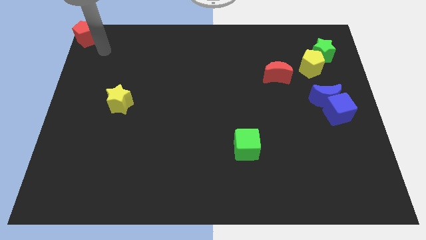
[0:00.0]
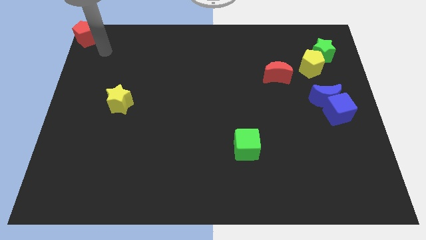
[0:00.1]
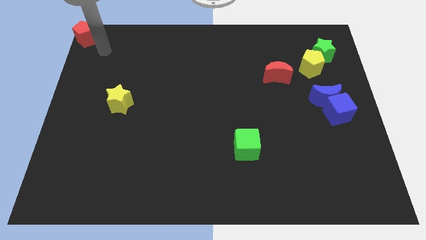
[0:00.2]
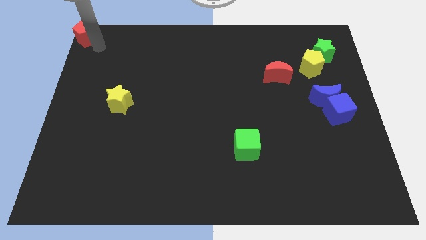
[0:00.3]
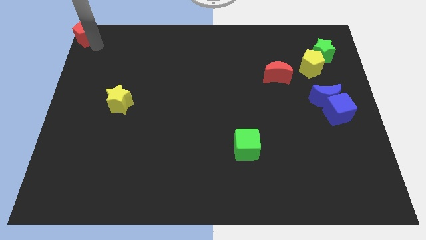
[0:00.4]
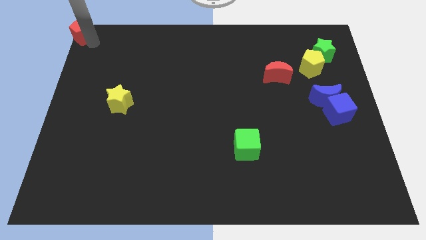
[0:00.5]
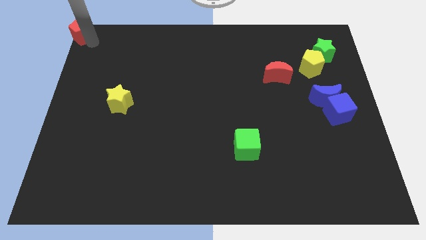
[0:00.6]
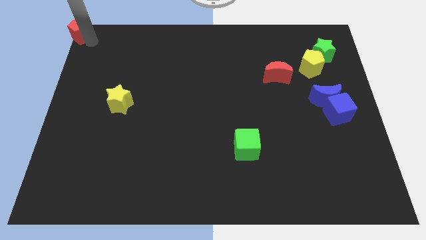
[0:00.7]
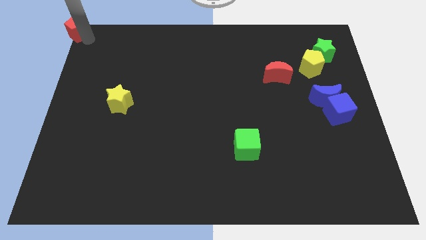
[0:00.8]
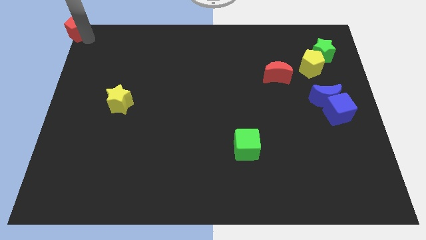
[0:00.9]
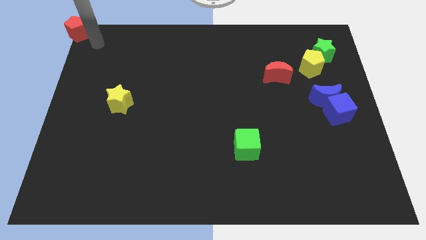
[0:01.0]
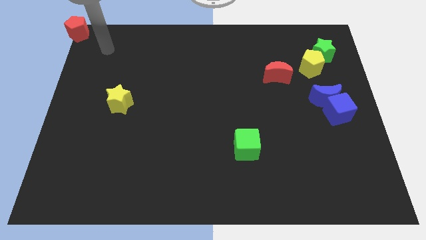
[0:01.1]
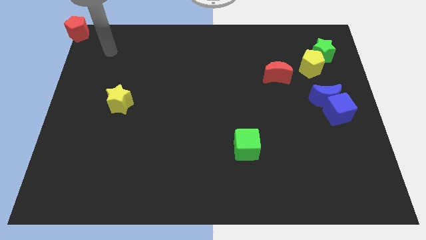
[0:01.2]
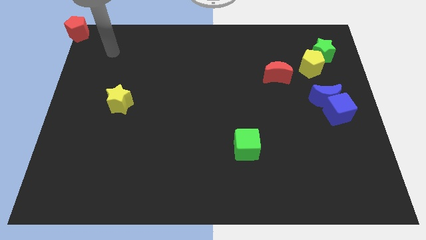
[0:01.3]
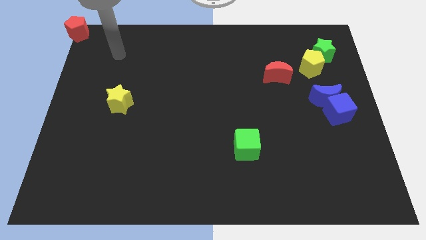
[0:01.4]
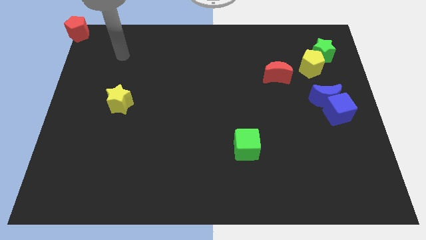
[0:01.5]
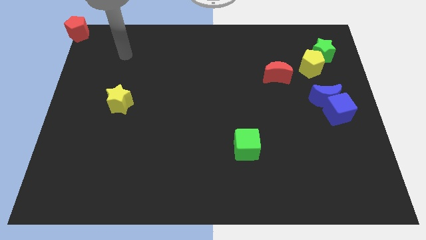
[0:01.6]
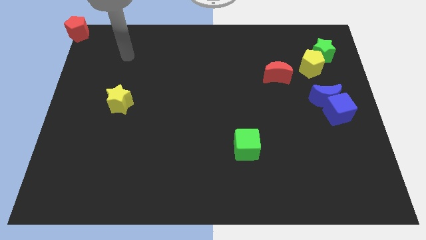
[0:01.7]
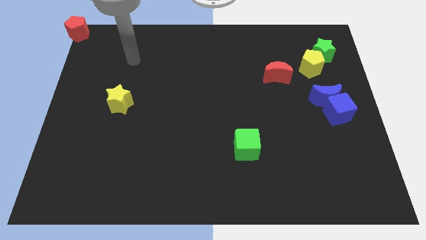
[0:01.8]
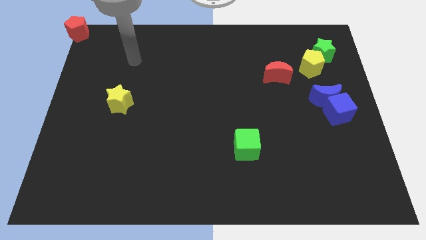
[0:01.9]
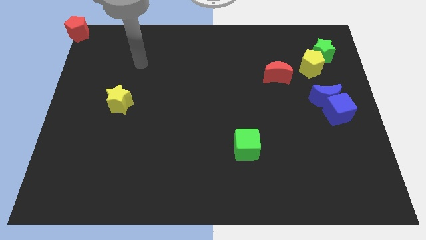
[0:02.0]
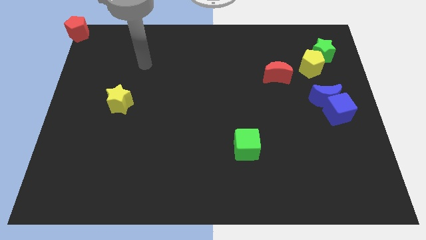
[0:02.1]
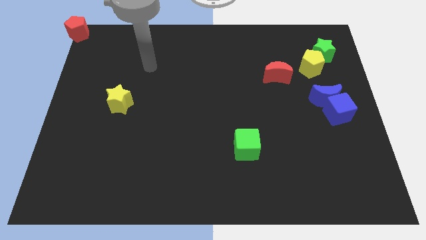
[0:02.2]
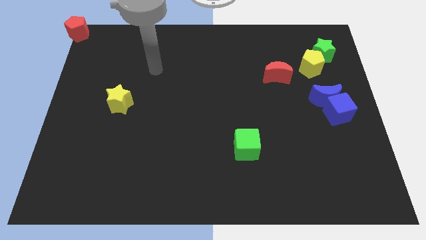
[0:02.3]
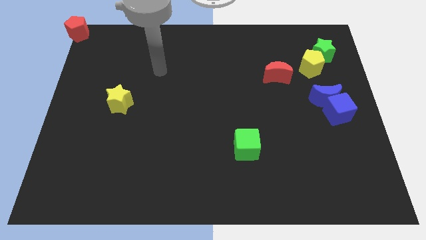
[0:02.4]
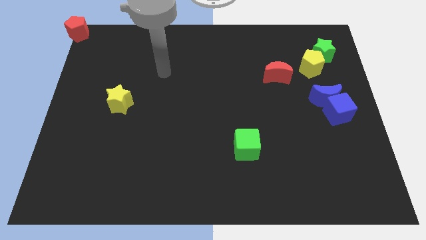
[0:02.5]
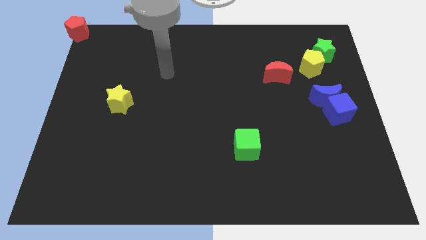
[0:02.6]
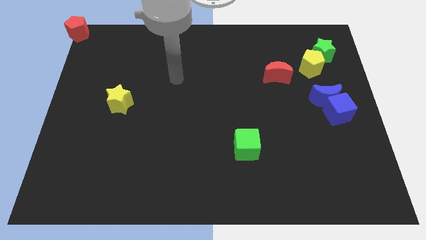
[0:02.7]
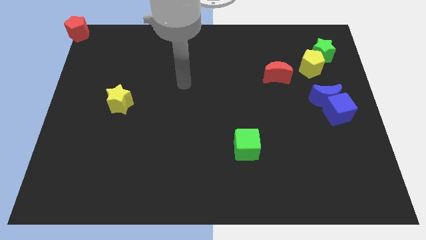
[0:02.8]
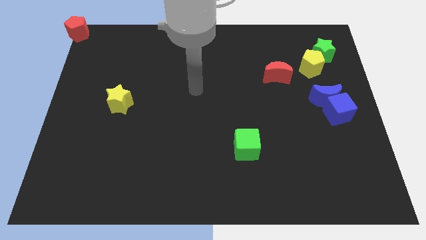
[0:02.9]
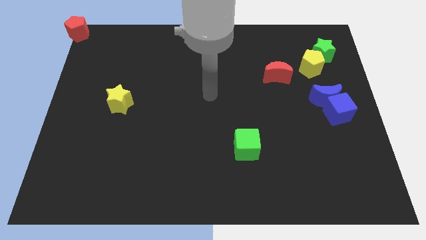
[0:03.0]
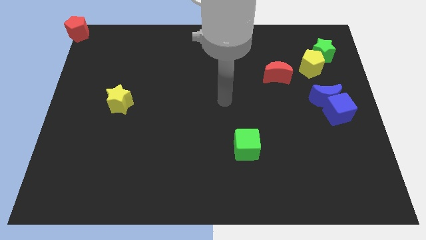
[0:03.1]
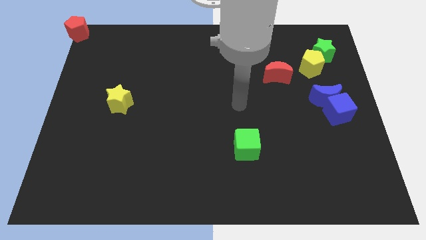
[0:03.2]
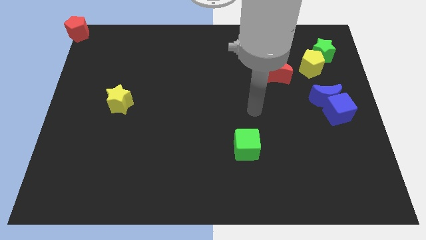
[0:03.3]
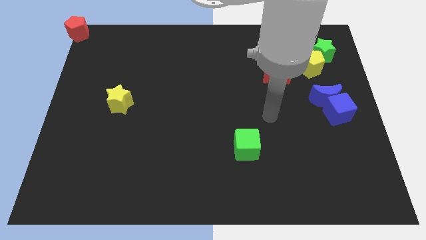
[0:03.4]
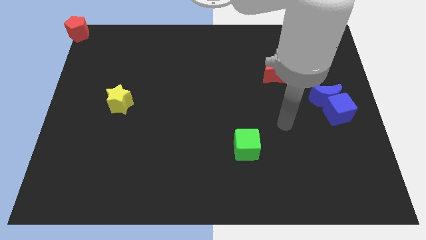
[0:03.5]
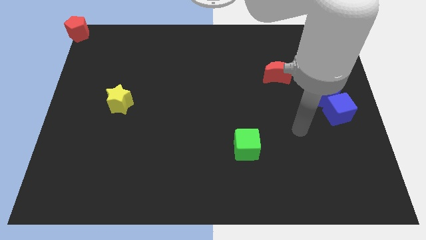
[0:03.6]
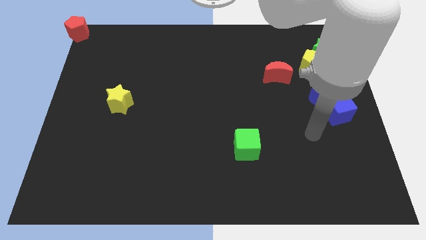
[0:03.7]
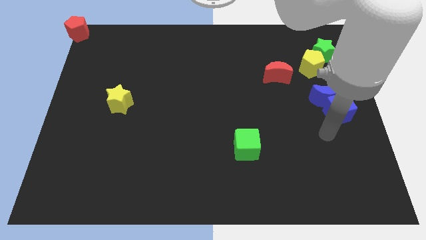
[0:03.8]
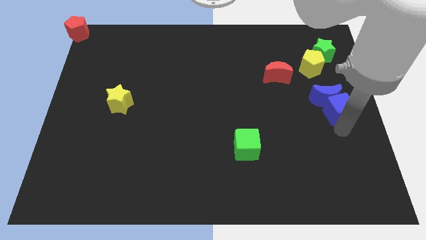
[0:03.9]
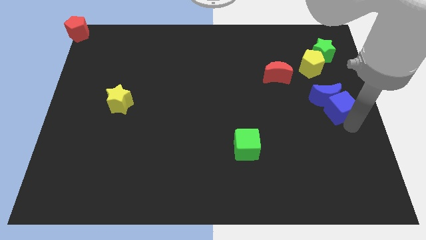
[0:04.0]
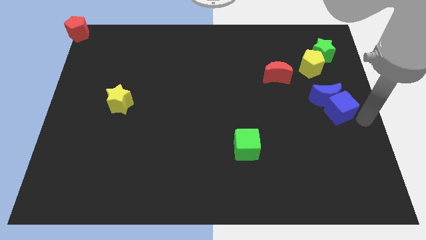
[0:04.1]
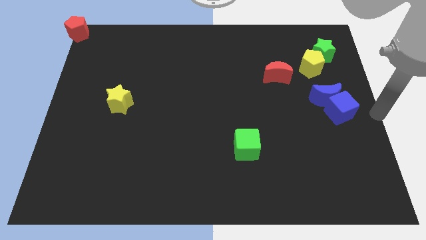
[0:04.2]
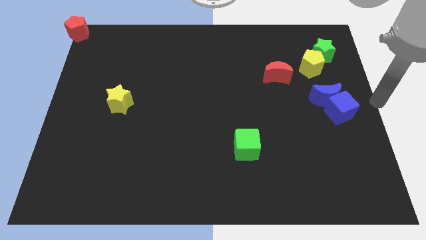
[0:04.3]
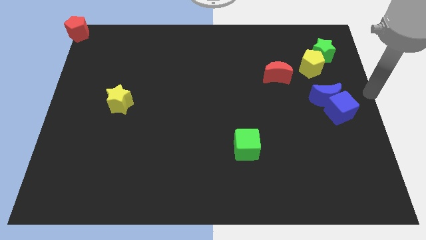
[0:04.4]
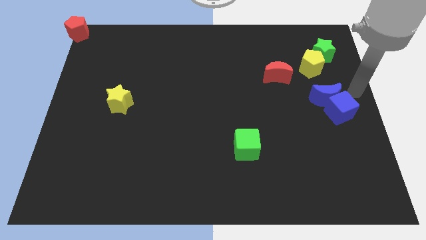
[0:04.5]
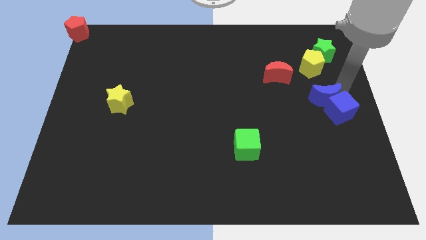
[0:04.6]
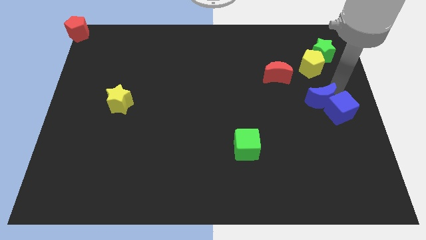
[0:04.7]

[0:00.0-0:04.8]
move the arm to the blue moon

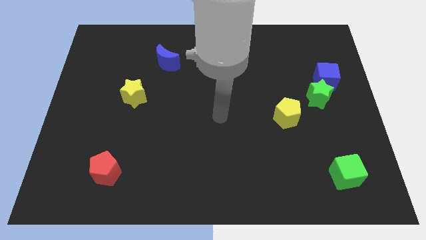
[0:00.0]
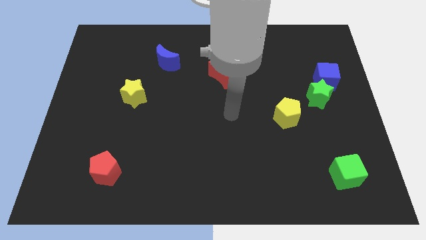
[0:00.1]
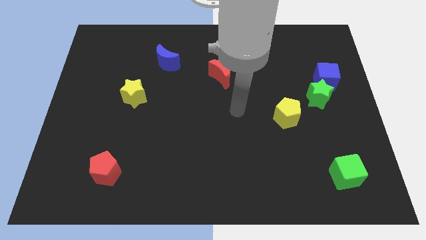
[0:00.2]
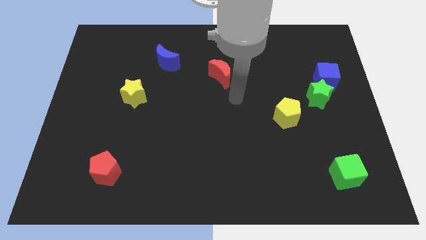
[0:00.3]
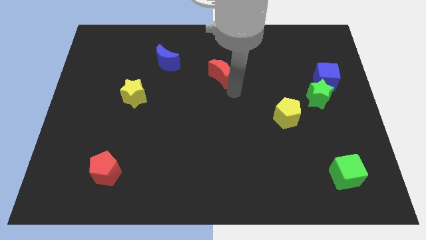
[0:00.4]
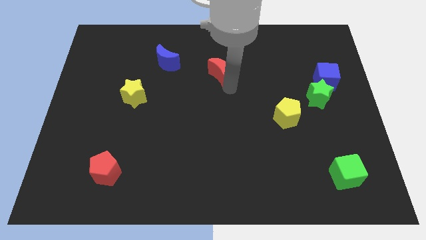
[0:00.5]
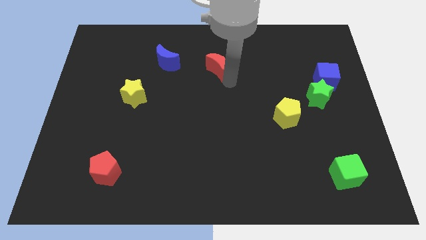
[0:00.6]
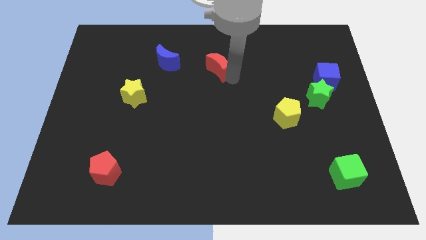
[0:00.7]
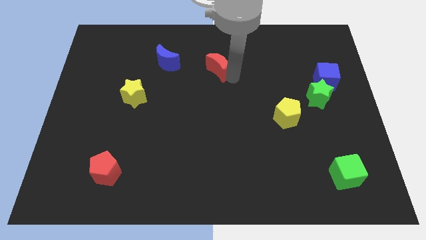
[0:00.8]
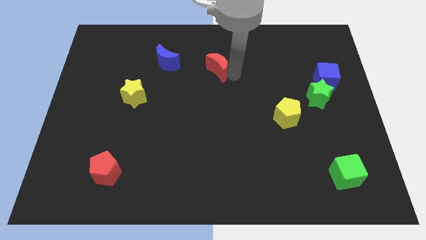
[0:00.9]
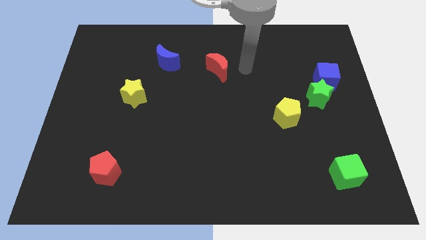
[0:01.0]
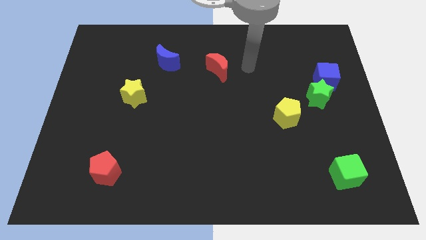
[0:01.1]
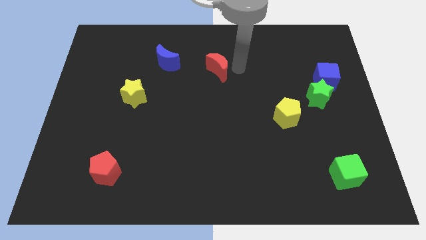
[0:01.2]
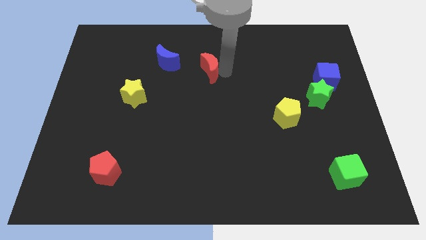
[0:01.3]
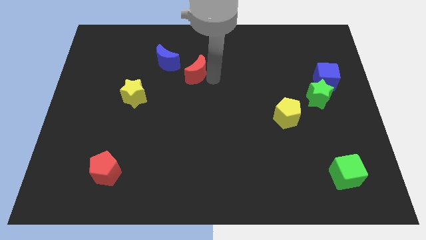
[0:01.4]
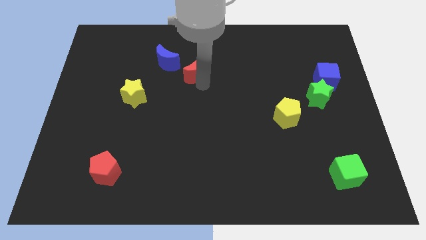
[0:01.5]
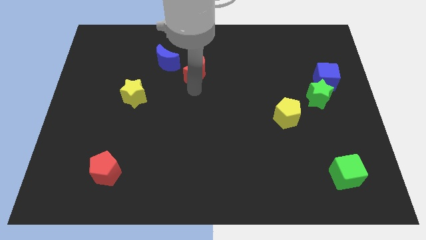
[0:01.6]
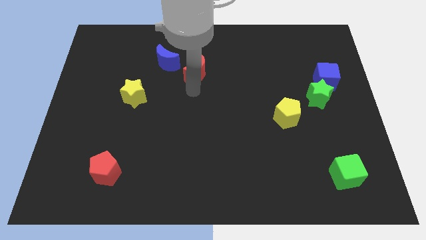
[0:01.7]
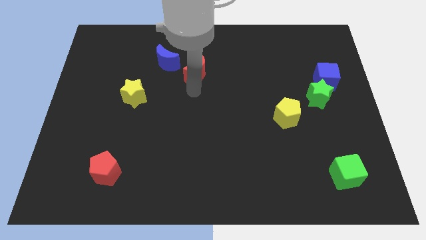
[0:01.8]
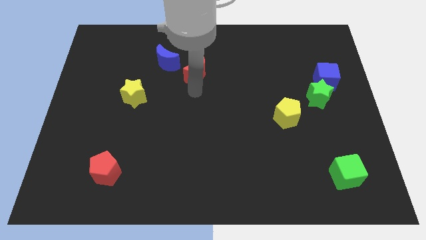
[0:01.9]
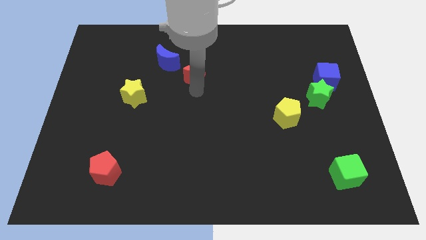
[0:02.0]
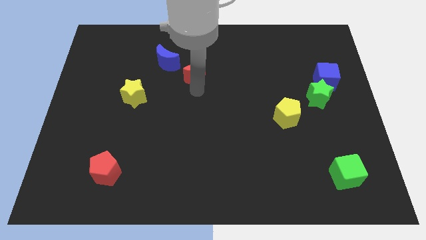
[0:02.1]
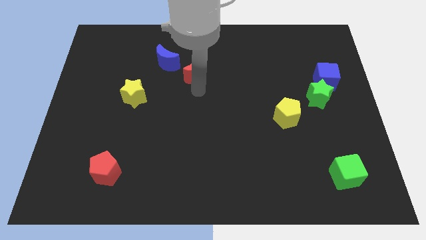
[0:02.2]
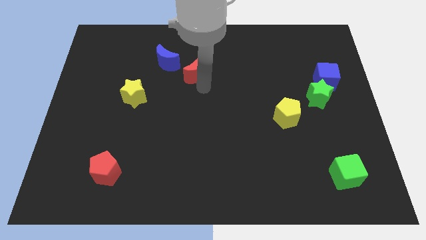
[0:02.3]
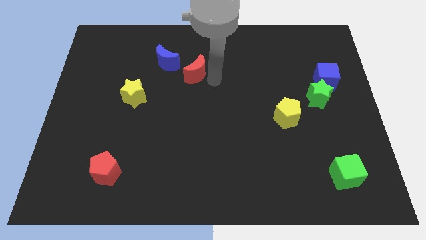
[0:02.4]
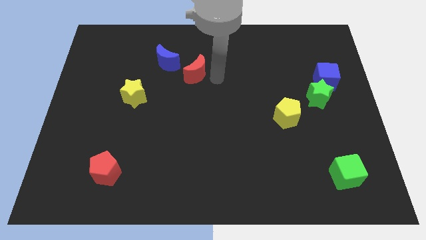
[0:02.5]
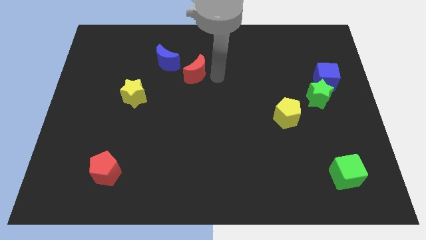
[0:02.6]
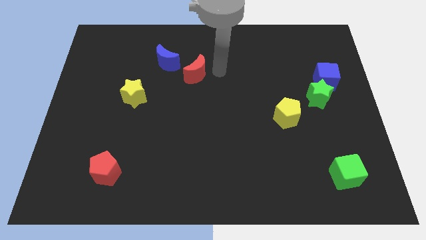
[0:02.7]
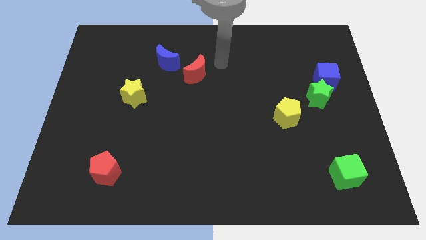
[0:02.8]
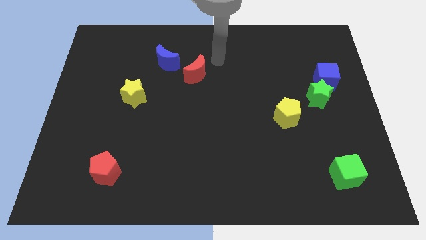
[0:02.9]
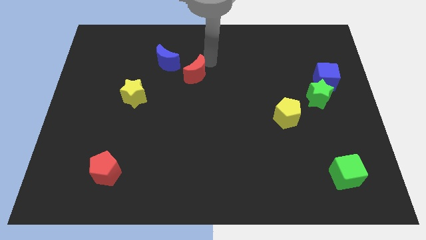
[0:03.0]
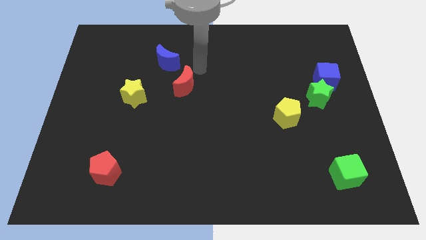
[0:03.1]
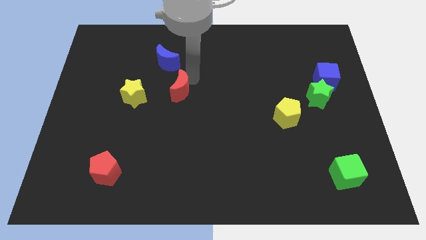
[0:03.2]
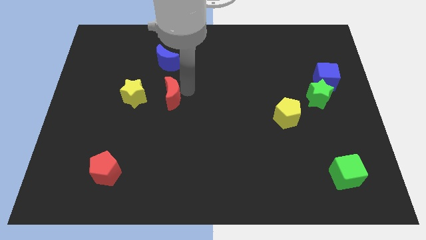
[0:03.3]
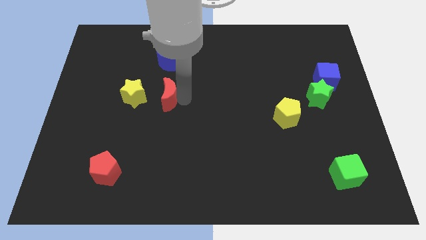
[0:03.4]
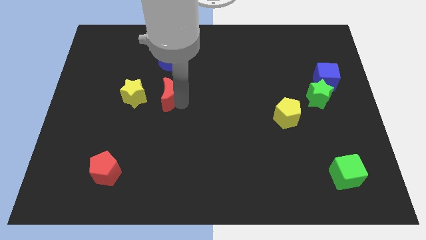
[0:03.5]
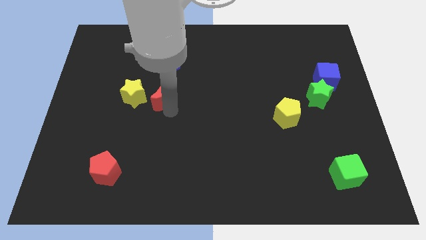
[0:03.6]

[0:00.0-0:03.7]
place red crescent below blue crescent

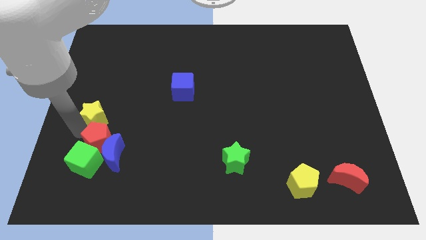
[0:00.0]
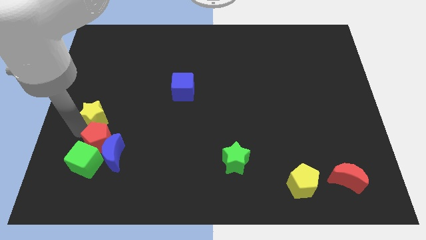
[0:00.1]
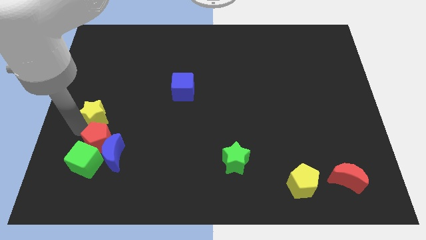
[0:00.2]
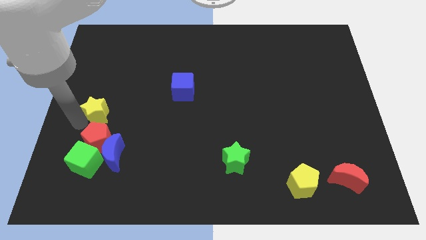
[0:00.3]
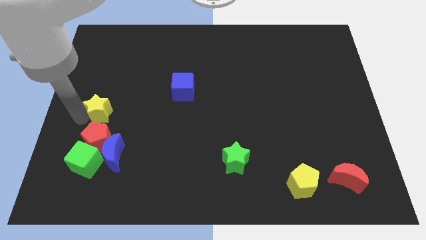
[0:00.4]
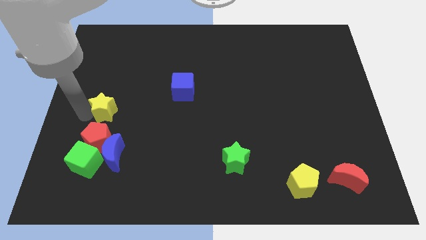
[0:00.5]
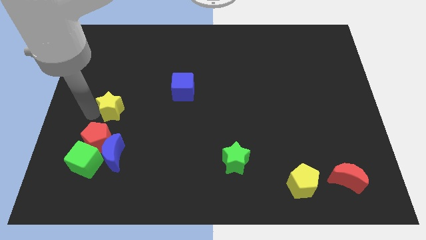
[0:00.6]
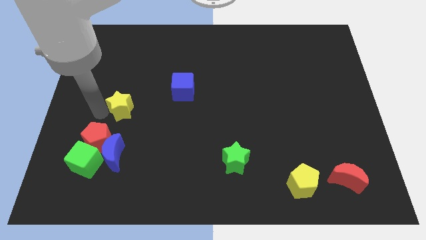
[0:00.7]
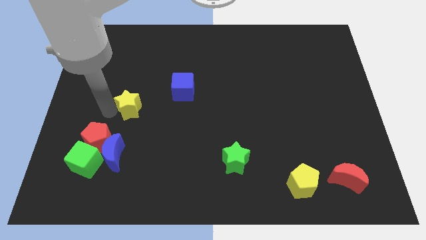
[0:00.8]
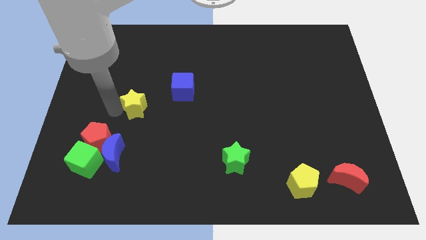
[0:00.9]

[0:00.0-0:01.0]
place the yellow star diagonal to the red pentagon
